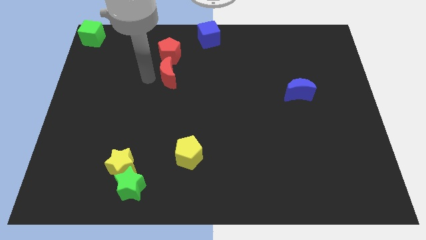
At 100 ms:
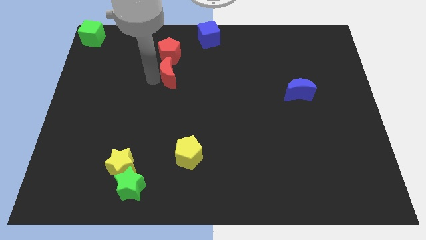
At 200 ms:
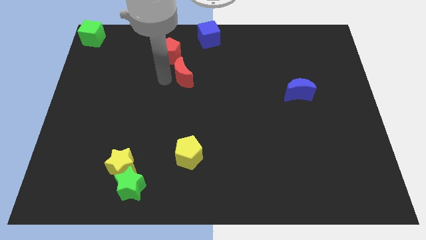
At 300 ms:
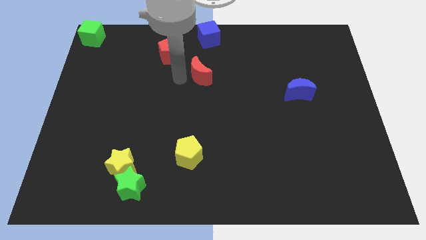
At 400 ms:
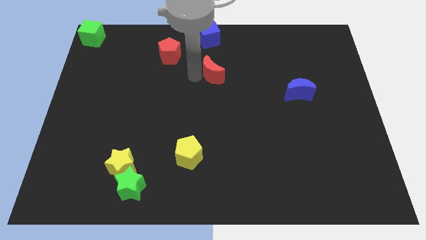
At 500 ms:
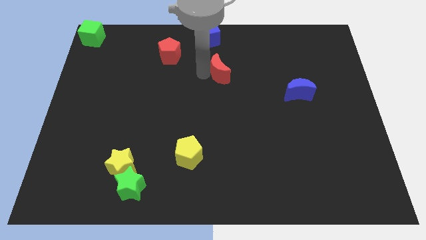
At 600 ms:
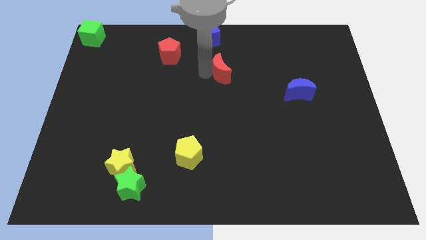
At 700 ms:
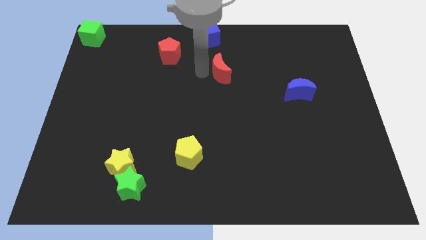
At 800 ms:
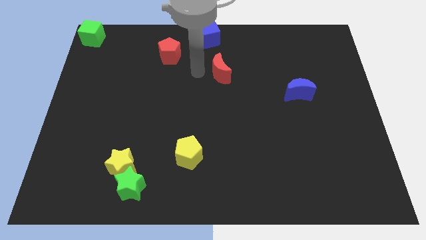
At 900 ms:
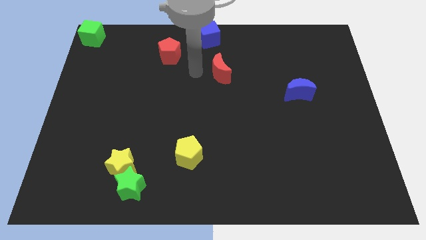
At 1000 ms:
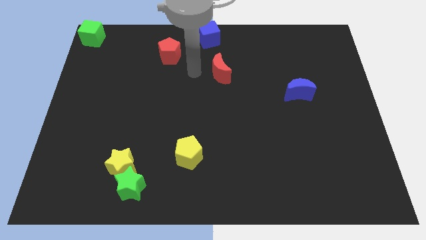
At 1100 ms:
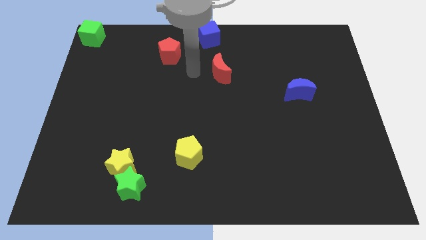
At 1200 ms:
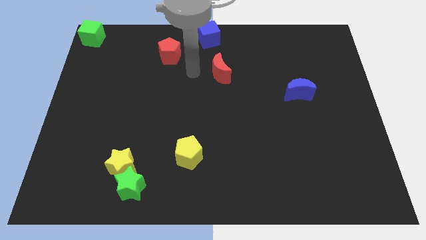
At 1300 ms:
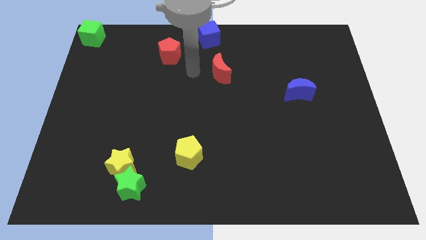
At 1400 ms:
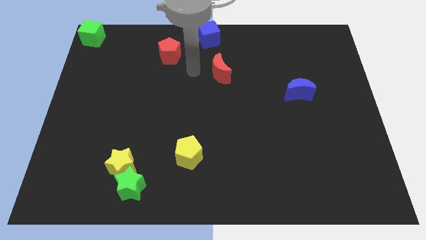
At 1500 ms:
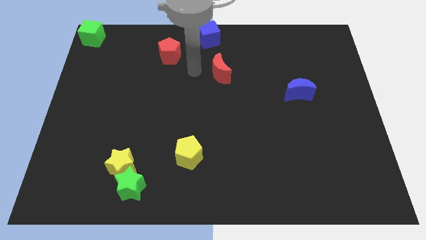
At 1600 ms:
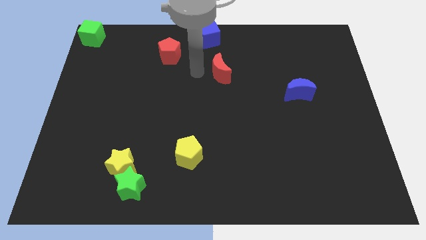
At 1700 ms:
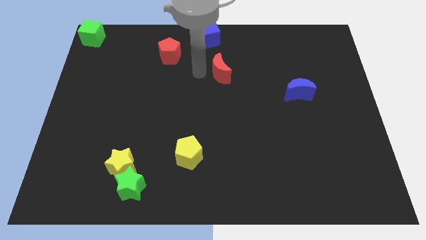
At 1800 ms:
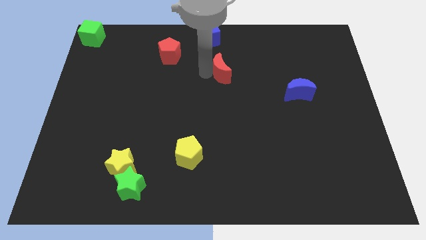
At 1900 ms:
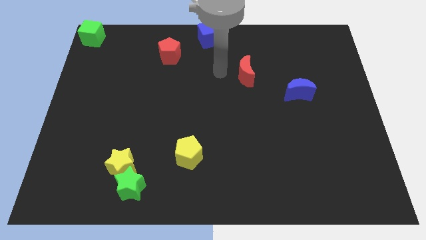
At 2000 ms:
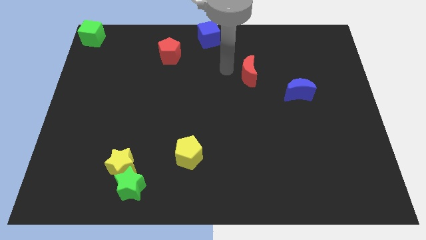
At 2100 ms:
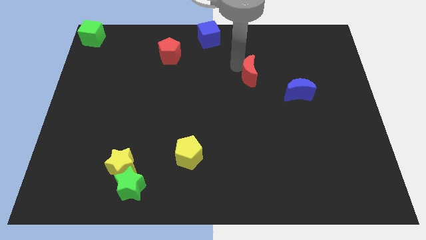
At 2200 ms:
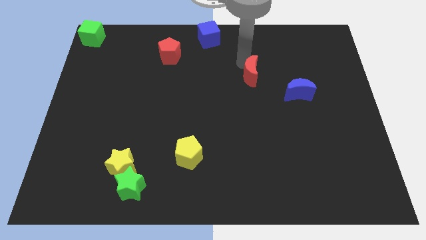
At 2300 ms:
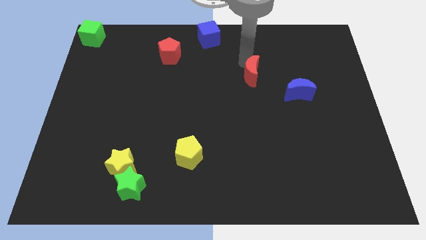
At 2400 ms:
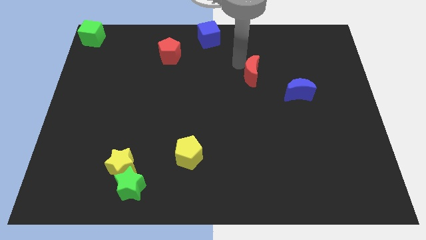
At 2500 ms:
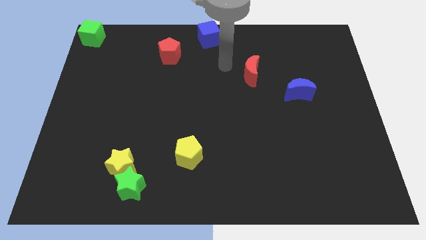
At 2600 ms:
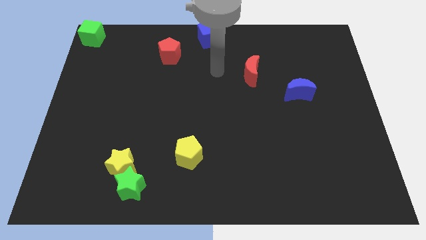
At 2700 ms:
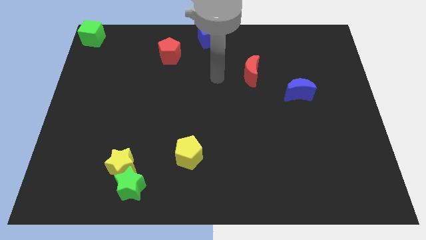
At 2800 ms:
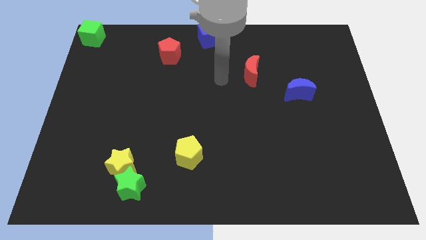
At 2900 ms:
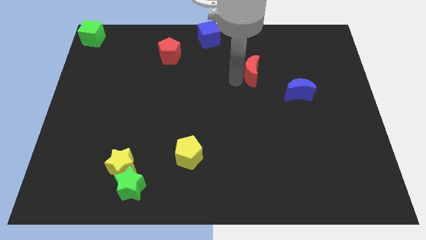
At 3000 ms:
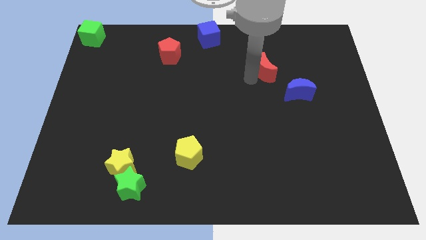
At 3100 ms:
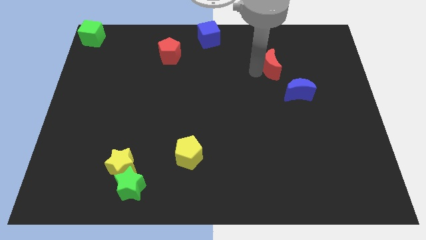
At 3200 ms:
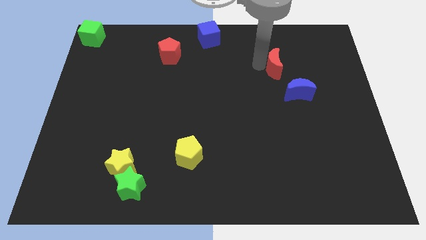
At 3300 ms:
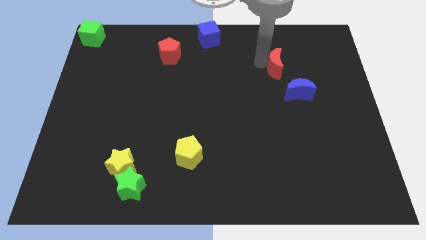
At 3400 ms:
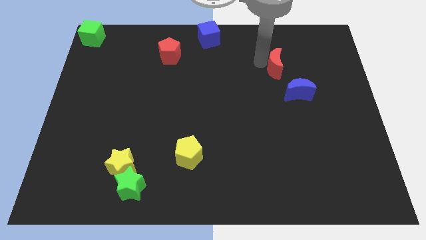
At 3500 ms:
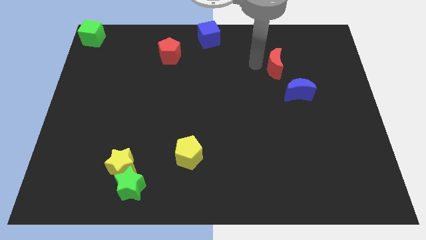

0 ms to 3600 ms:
move red moon left above the blue moon

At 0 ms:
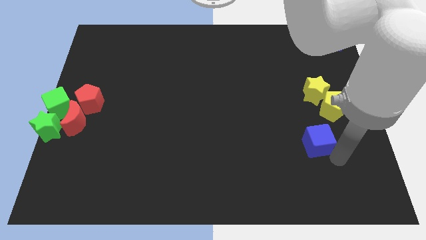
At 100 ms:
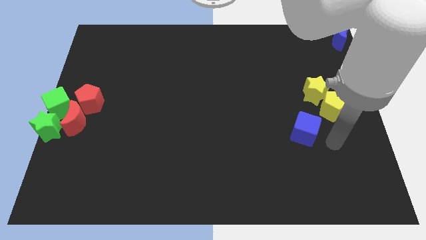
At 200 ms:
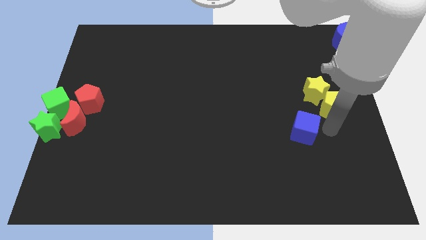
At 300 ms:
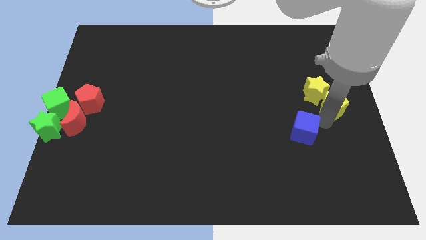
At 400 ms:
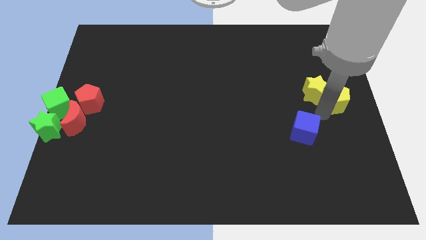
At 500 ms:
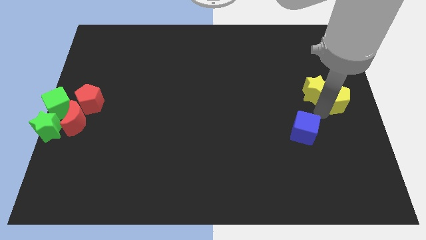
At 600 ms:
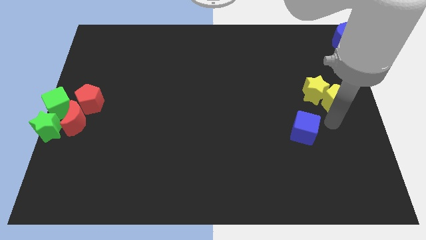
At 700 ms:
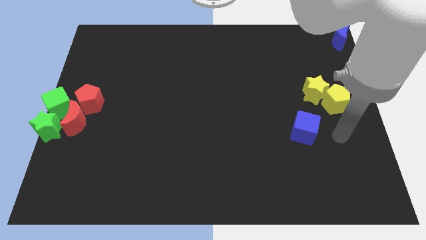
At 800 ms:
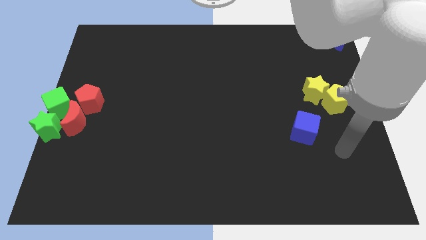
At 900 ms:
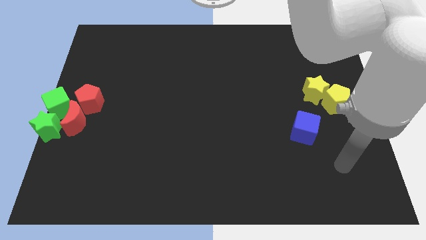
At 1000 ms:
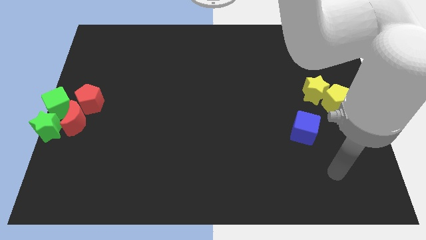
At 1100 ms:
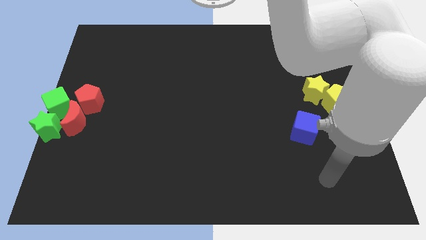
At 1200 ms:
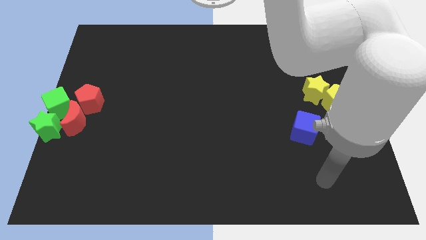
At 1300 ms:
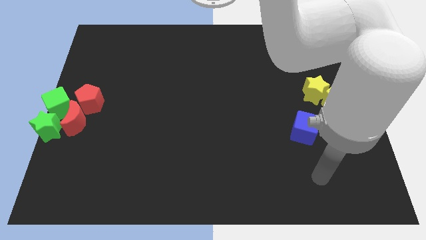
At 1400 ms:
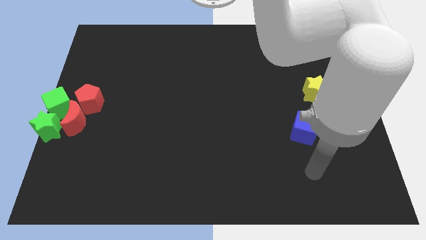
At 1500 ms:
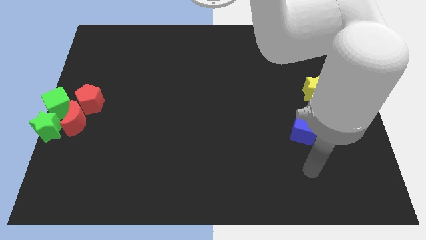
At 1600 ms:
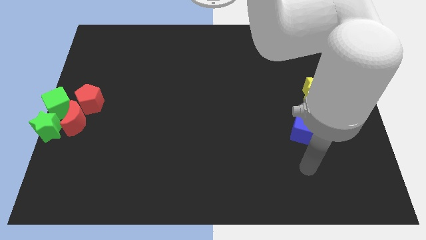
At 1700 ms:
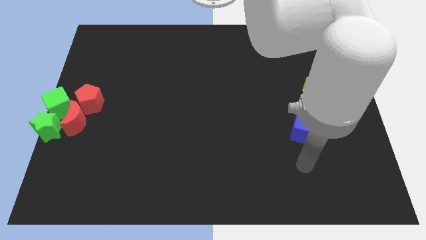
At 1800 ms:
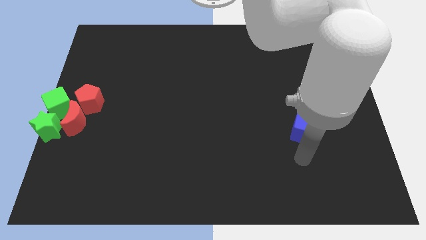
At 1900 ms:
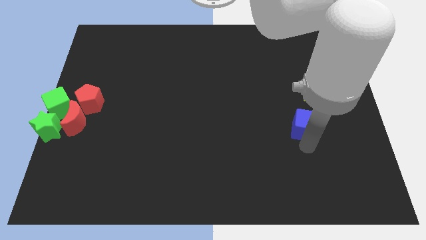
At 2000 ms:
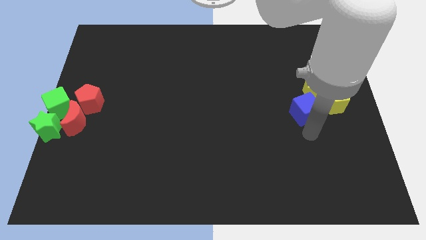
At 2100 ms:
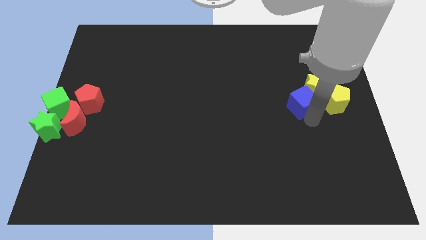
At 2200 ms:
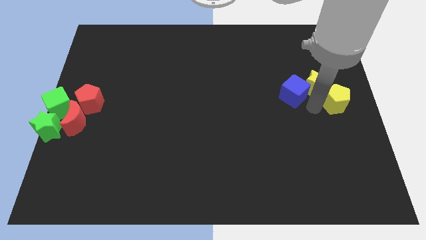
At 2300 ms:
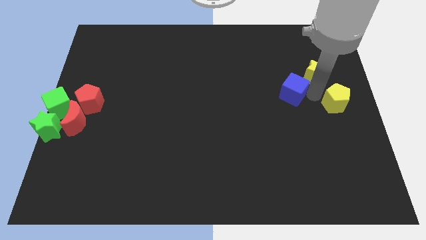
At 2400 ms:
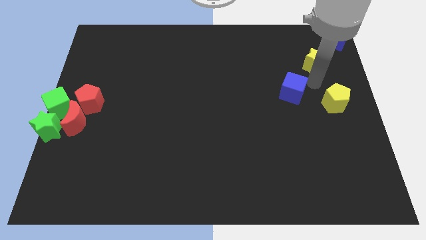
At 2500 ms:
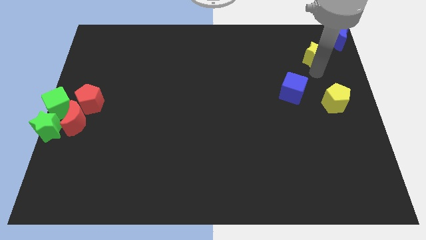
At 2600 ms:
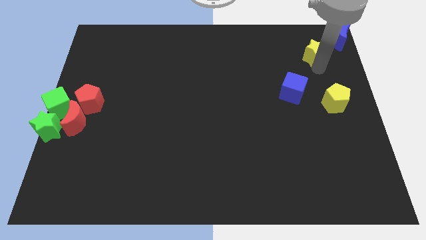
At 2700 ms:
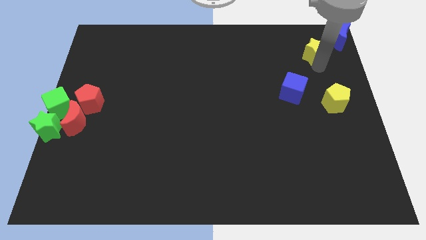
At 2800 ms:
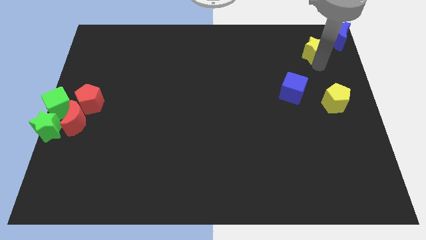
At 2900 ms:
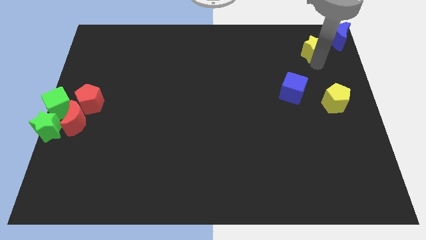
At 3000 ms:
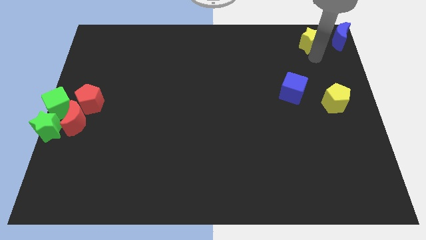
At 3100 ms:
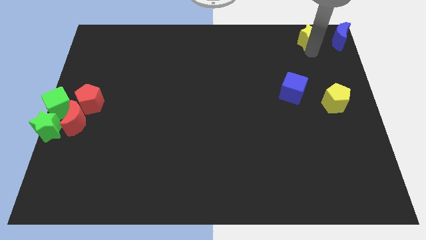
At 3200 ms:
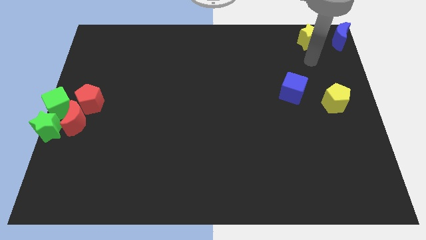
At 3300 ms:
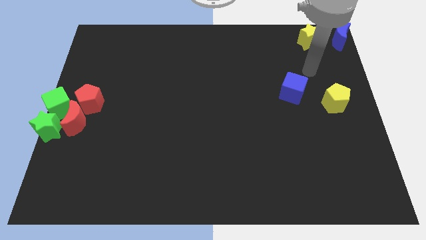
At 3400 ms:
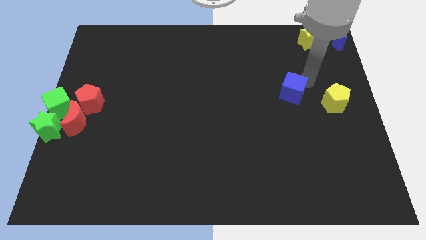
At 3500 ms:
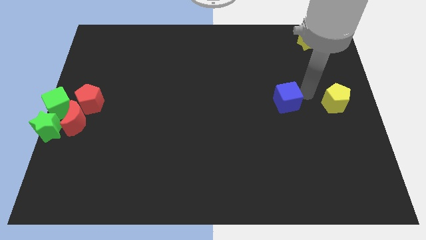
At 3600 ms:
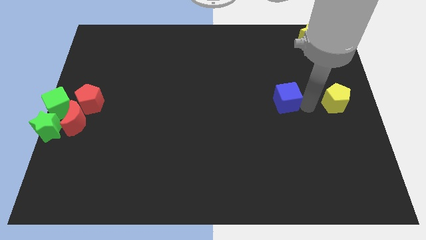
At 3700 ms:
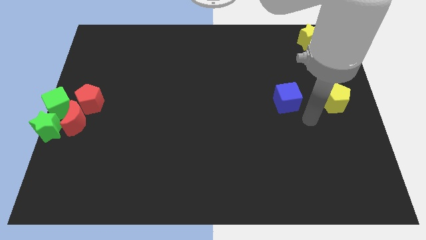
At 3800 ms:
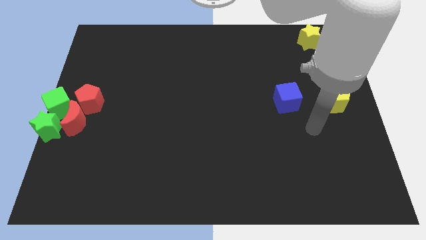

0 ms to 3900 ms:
place the yellow star left to the blue crescent

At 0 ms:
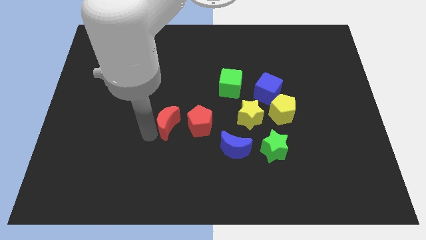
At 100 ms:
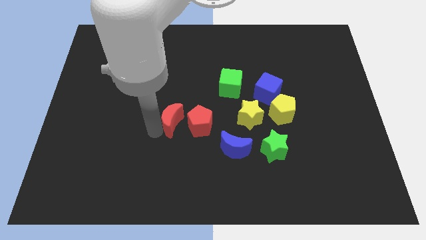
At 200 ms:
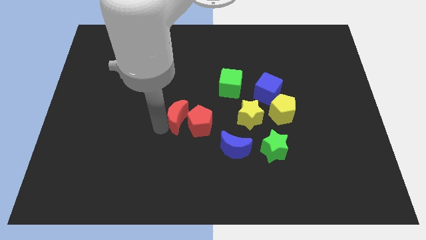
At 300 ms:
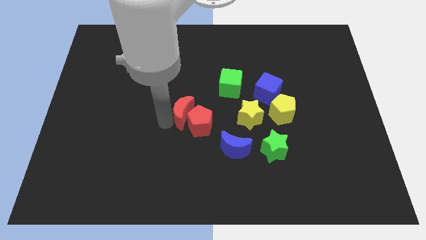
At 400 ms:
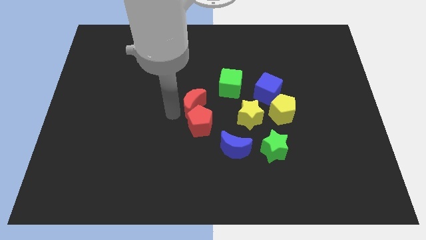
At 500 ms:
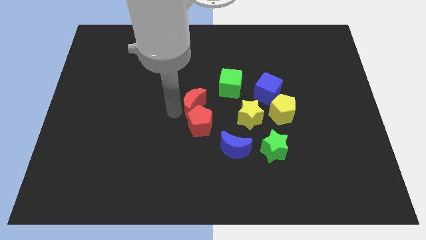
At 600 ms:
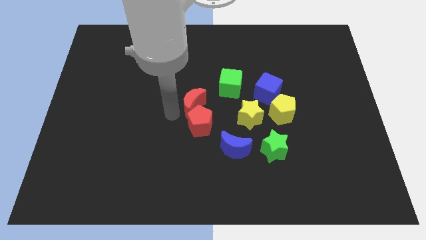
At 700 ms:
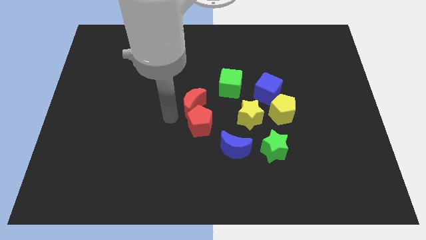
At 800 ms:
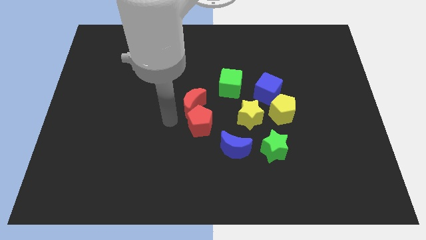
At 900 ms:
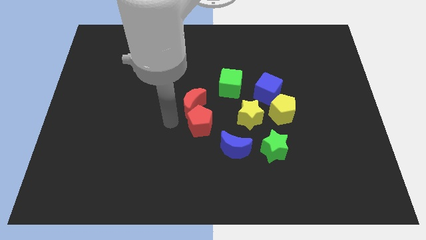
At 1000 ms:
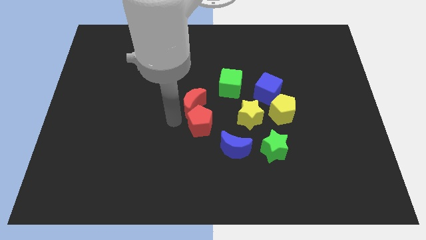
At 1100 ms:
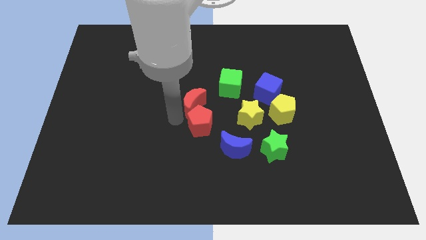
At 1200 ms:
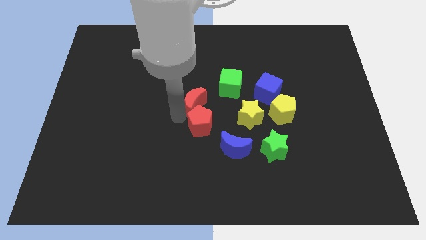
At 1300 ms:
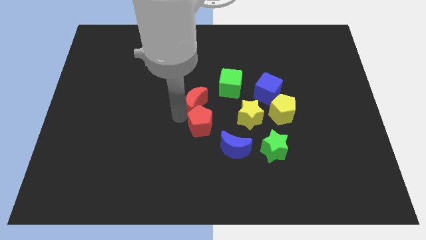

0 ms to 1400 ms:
place the red crescent above the red pentagon

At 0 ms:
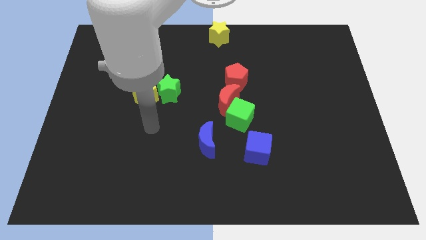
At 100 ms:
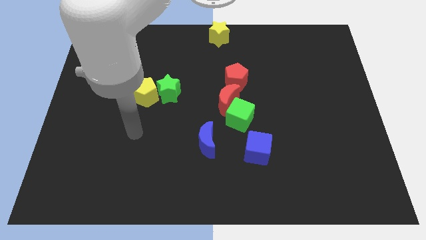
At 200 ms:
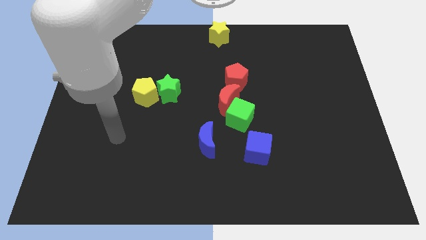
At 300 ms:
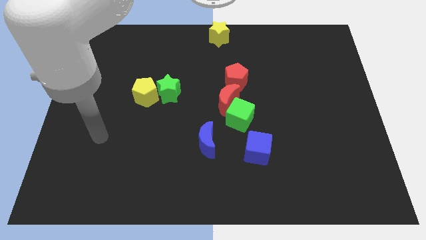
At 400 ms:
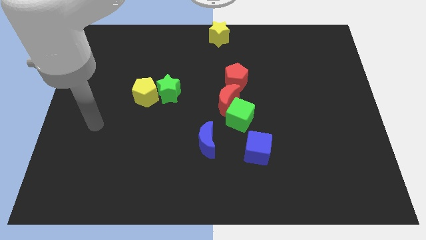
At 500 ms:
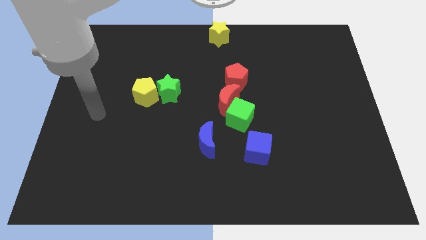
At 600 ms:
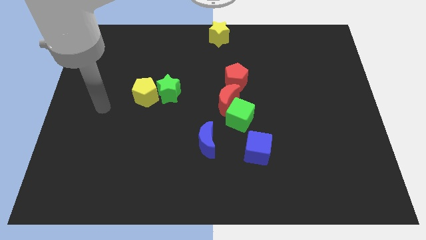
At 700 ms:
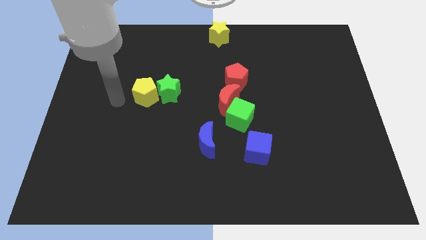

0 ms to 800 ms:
point your hand at the left side of the yellow pentagon
